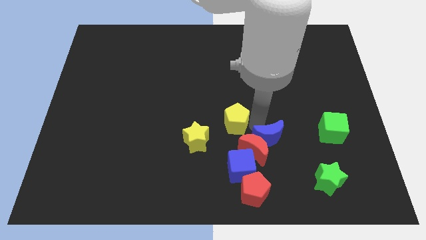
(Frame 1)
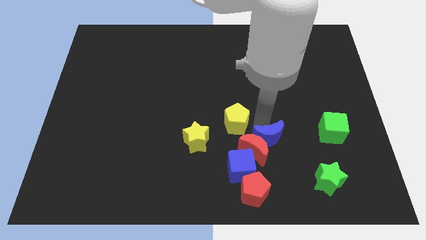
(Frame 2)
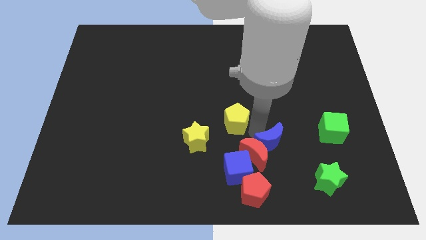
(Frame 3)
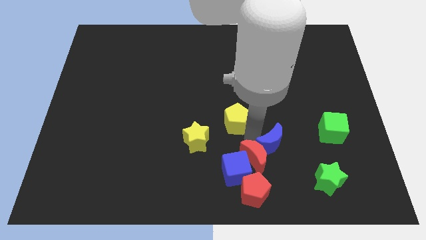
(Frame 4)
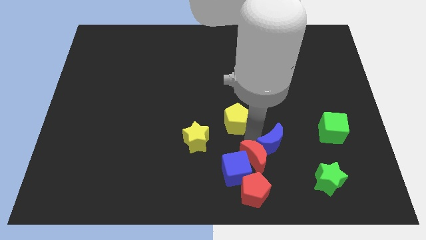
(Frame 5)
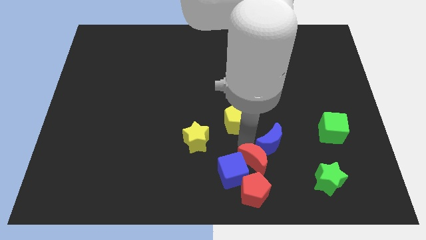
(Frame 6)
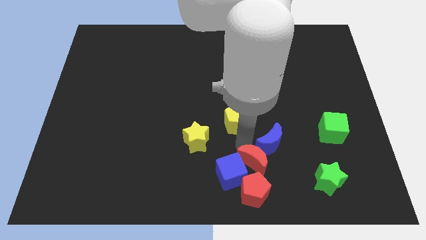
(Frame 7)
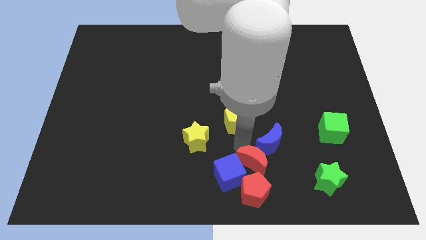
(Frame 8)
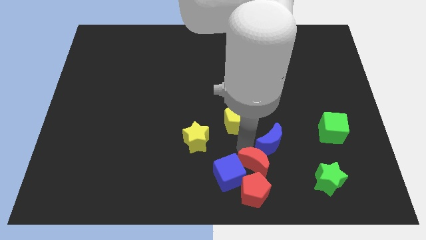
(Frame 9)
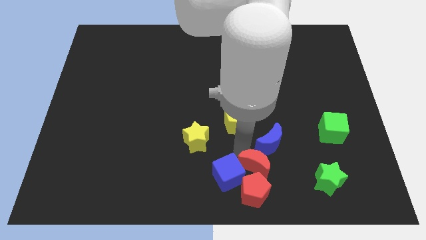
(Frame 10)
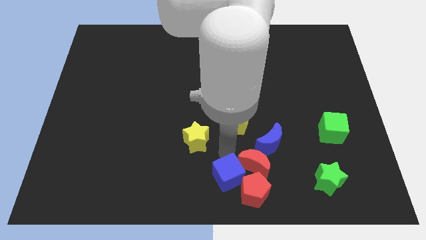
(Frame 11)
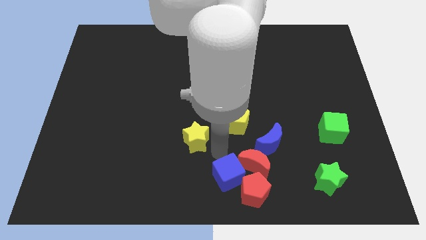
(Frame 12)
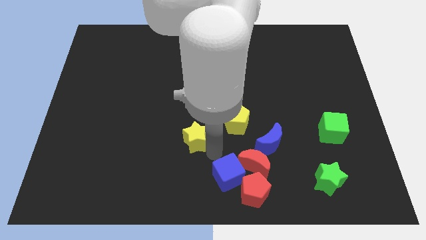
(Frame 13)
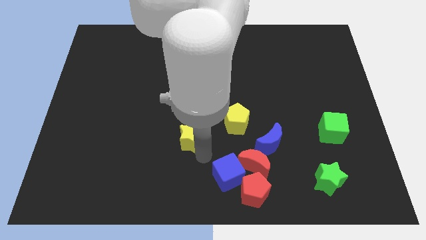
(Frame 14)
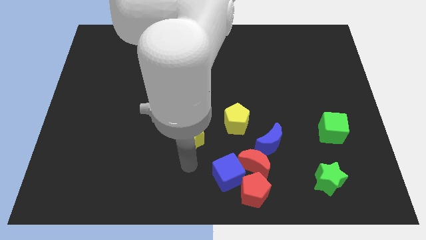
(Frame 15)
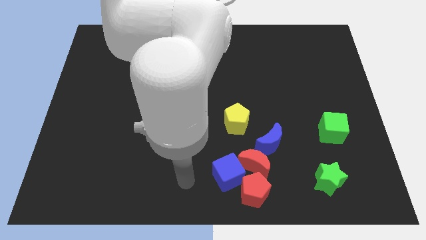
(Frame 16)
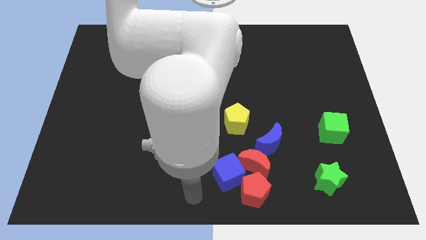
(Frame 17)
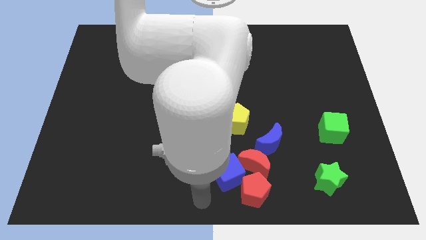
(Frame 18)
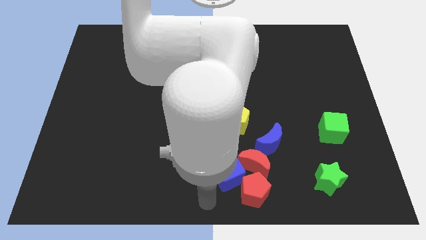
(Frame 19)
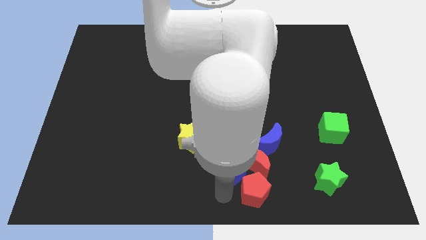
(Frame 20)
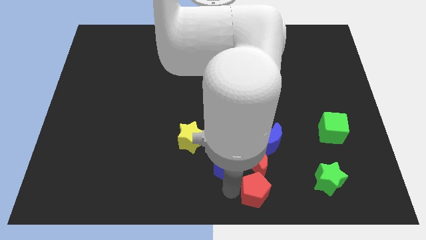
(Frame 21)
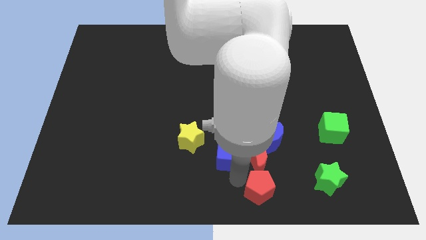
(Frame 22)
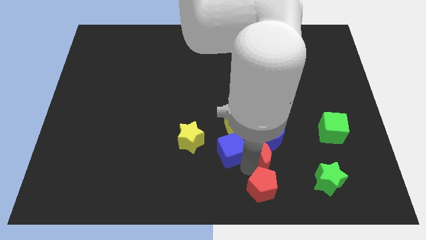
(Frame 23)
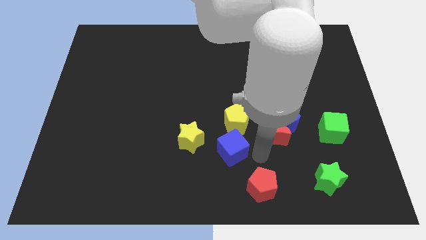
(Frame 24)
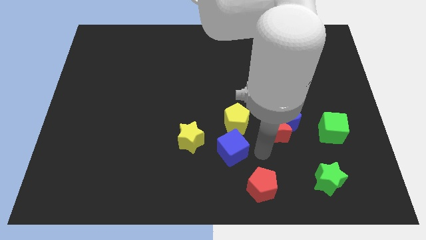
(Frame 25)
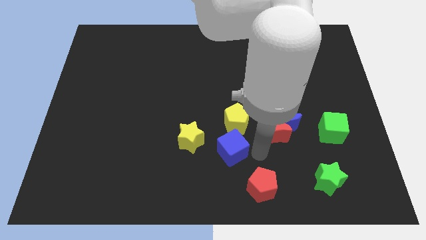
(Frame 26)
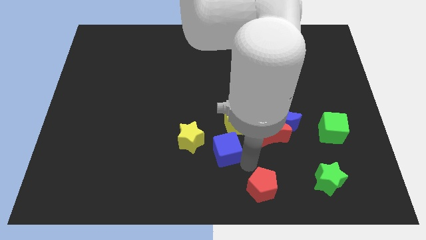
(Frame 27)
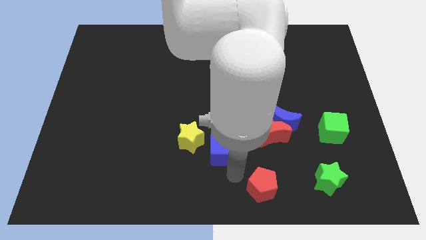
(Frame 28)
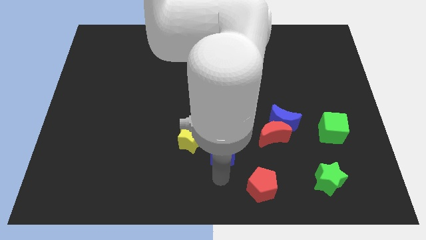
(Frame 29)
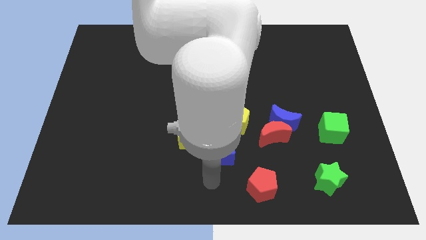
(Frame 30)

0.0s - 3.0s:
push the group of crescents and blue cube away from the red pentagon

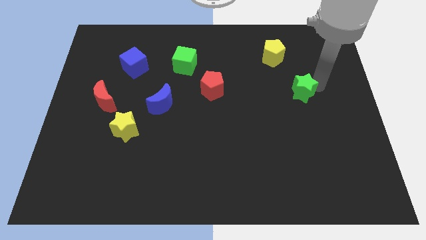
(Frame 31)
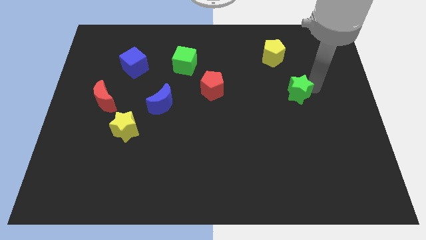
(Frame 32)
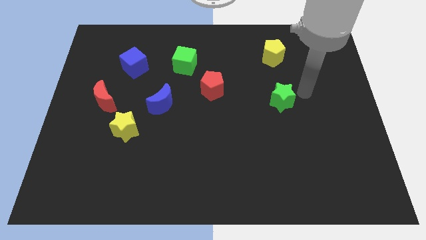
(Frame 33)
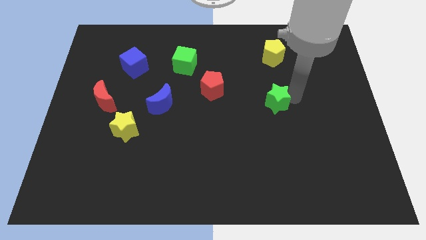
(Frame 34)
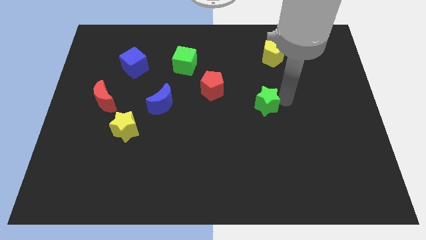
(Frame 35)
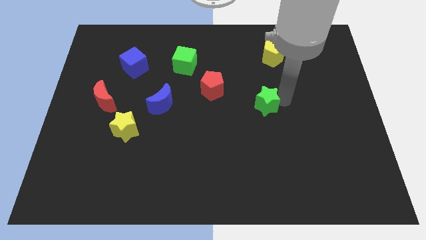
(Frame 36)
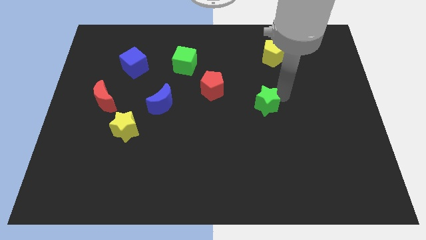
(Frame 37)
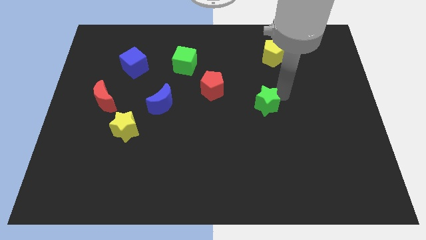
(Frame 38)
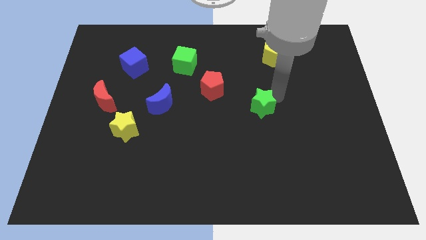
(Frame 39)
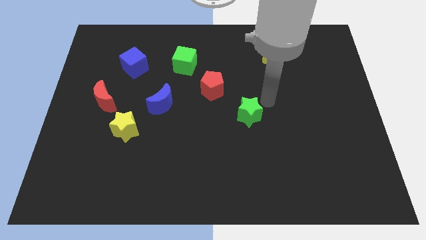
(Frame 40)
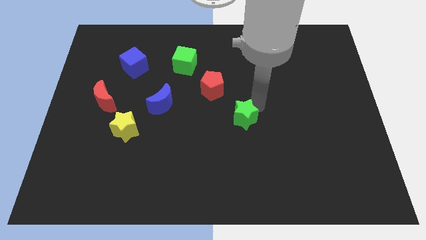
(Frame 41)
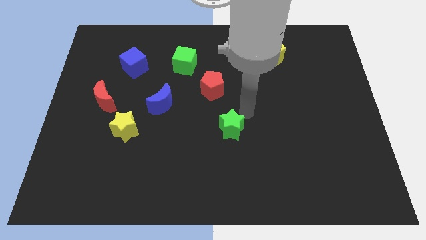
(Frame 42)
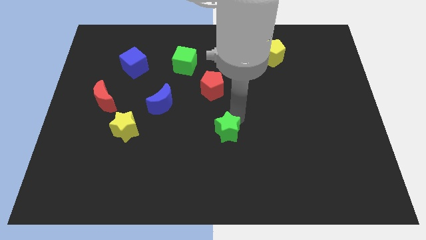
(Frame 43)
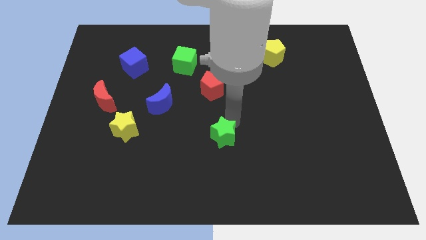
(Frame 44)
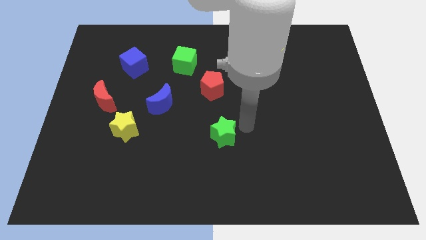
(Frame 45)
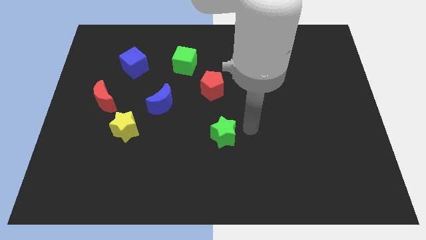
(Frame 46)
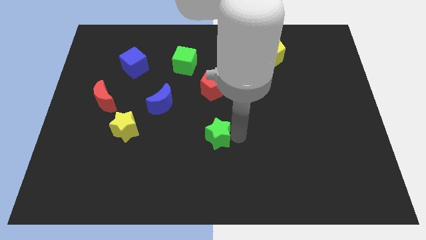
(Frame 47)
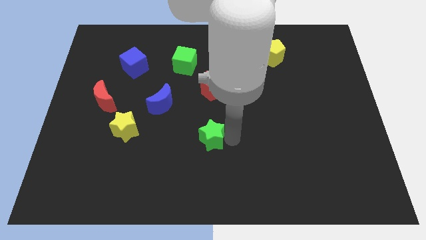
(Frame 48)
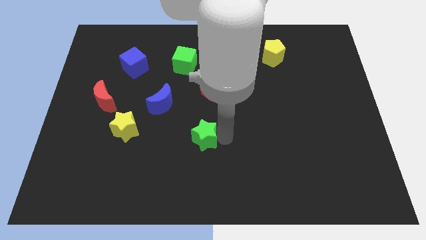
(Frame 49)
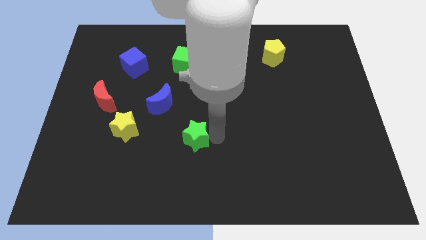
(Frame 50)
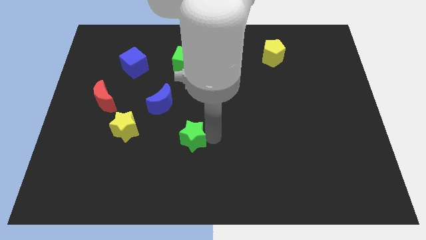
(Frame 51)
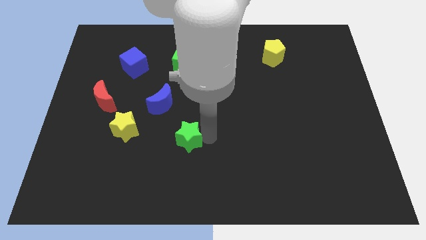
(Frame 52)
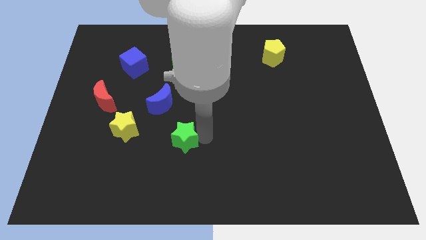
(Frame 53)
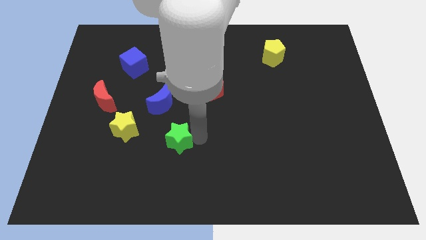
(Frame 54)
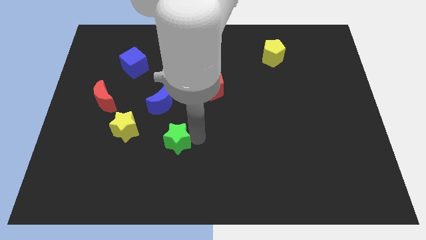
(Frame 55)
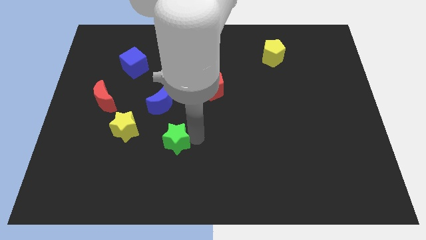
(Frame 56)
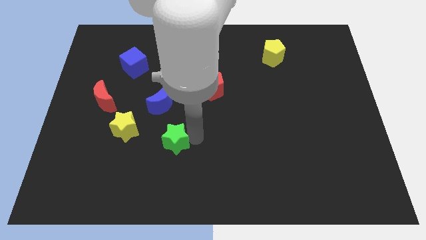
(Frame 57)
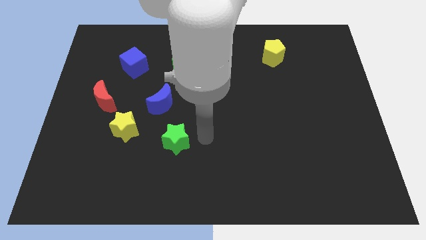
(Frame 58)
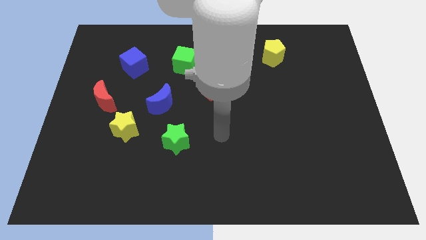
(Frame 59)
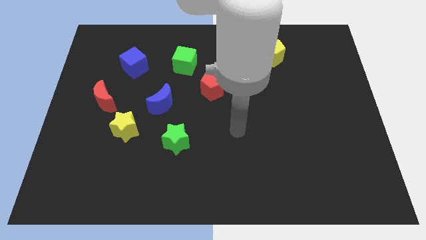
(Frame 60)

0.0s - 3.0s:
move the reen star to the right of the yellow star

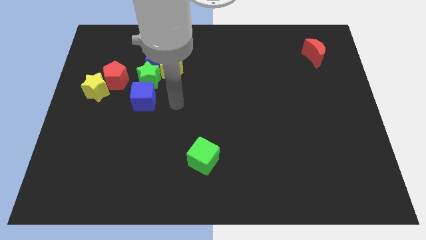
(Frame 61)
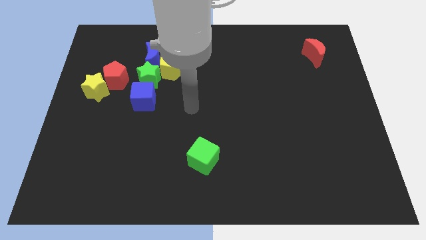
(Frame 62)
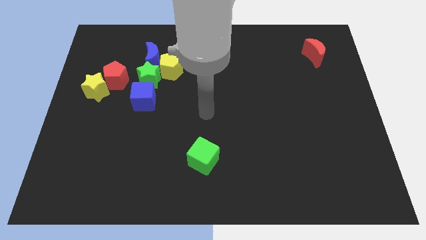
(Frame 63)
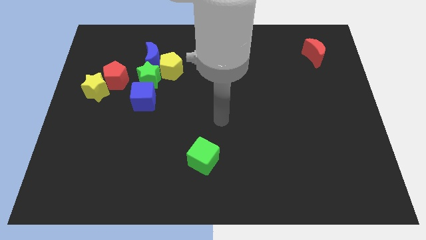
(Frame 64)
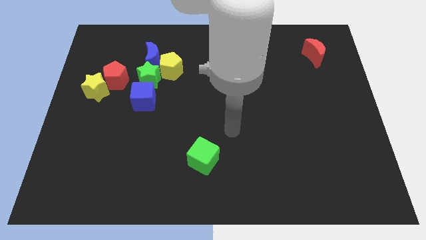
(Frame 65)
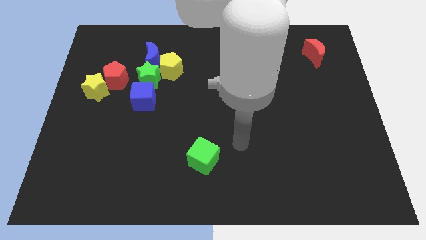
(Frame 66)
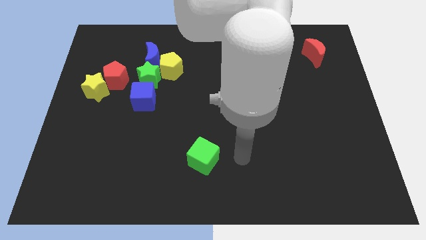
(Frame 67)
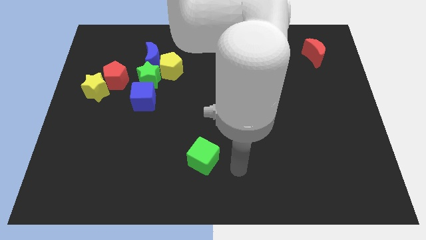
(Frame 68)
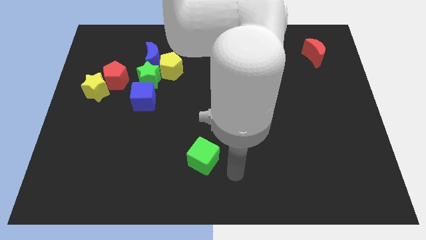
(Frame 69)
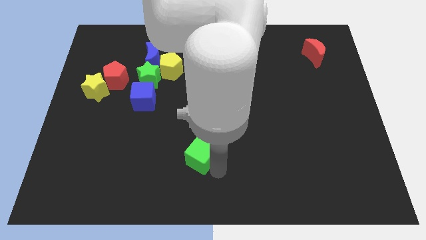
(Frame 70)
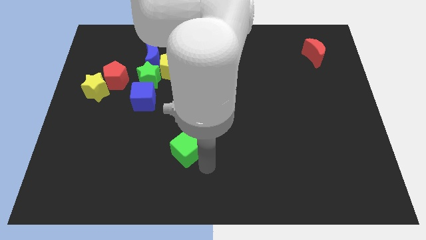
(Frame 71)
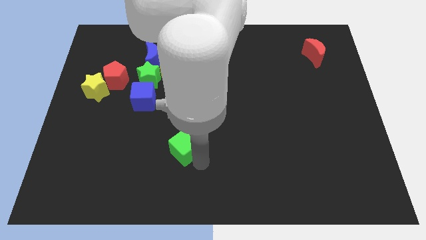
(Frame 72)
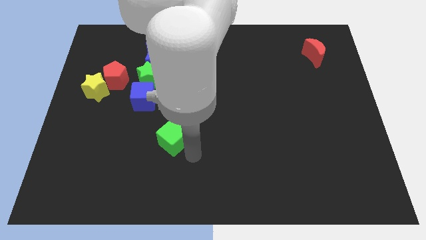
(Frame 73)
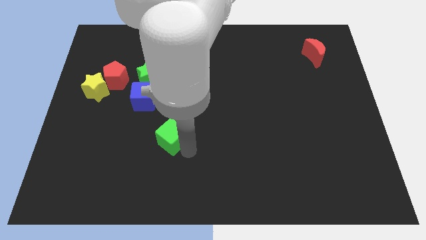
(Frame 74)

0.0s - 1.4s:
push the green cube diagonally on the bottom right side of the blue cube

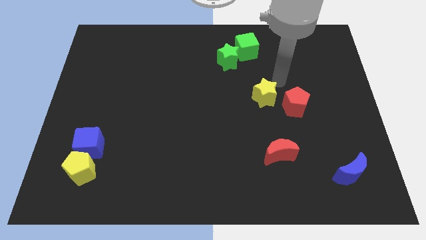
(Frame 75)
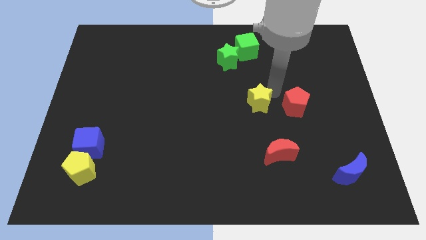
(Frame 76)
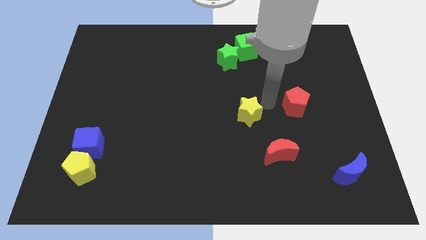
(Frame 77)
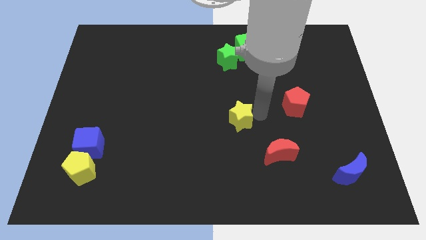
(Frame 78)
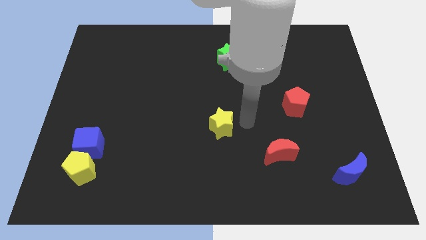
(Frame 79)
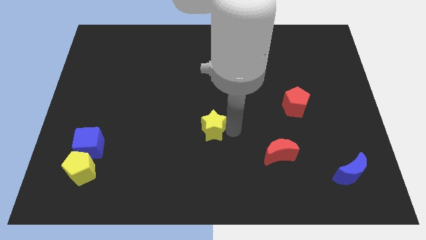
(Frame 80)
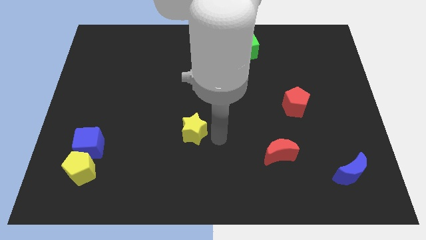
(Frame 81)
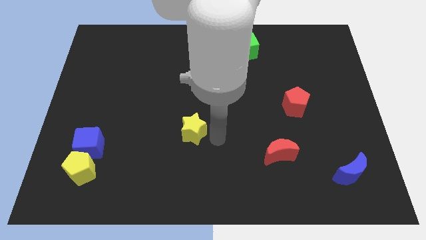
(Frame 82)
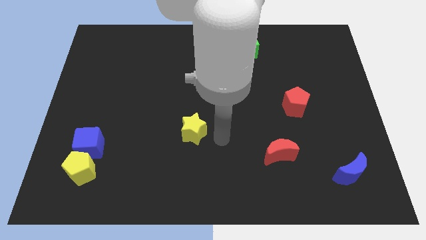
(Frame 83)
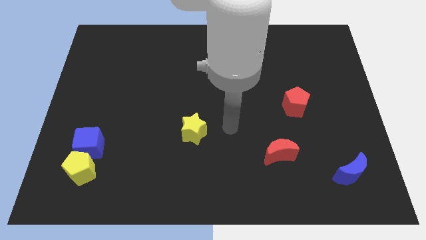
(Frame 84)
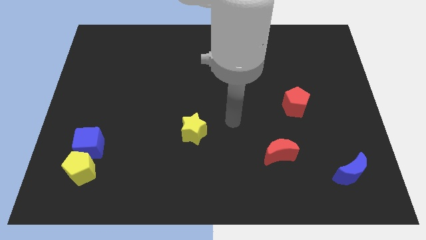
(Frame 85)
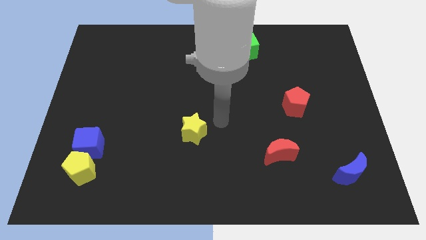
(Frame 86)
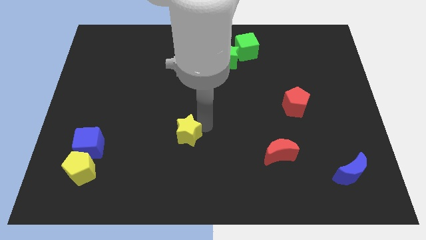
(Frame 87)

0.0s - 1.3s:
slide the yellow star away from the red pentagon

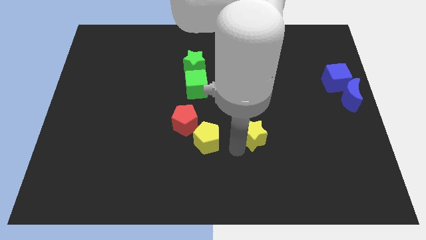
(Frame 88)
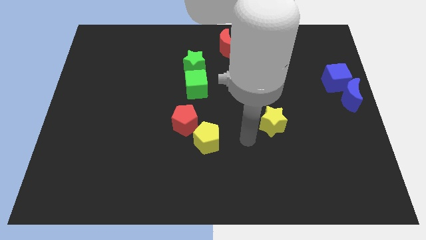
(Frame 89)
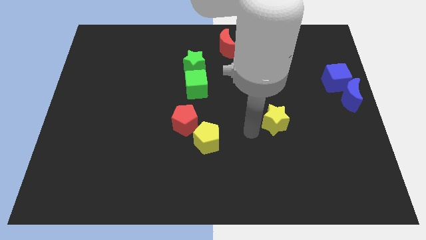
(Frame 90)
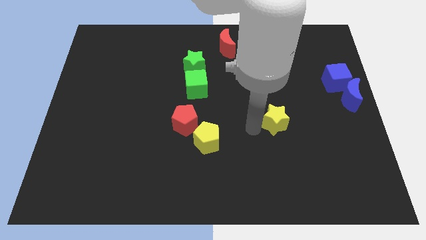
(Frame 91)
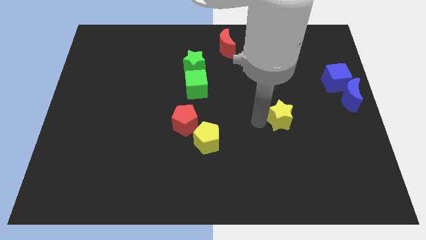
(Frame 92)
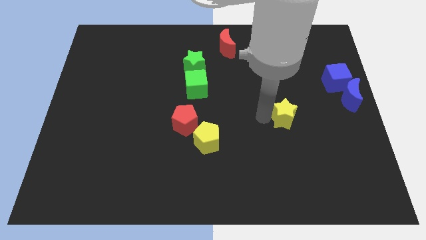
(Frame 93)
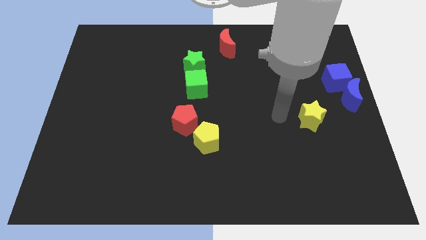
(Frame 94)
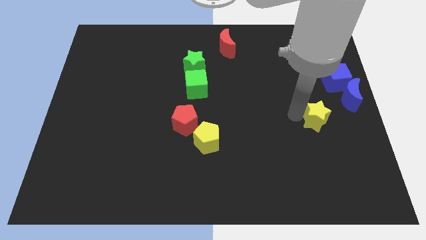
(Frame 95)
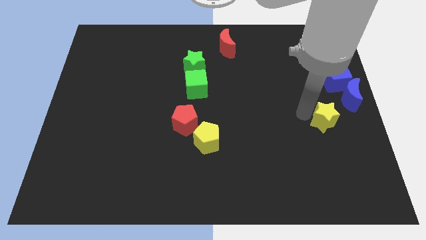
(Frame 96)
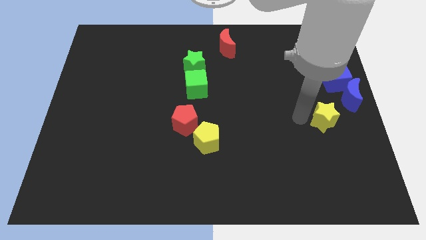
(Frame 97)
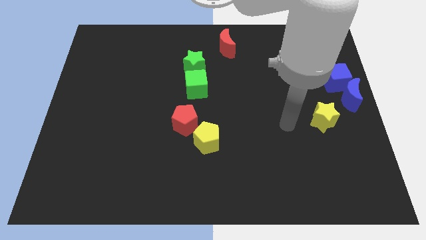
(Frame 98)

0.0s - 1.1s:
push yellow star towards blue moon
